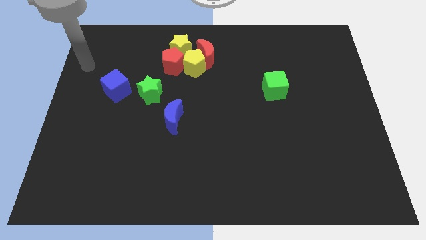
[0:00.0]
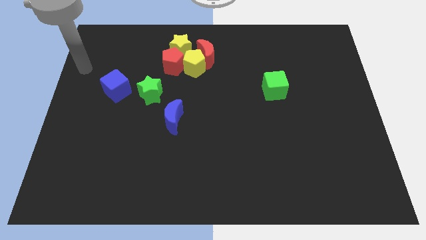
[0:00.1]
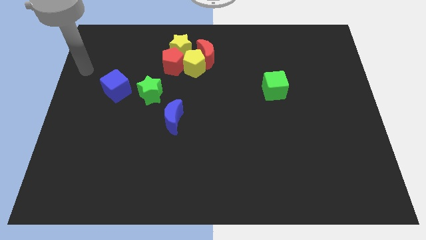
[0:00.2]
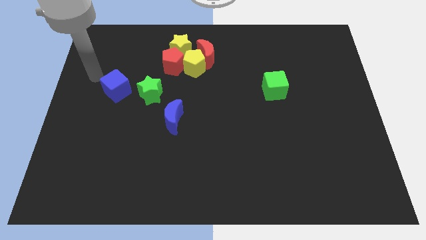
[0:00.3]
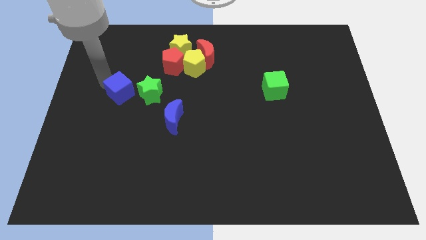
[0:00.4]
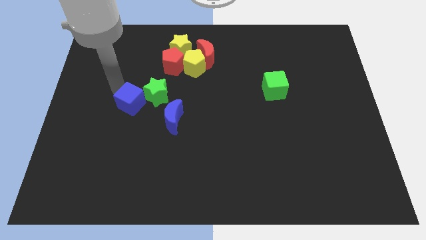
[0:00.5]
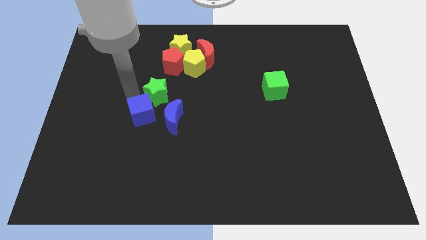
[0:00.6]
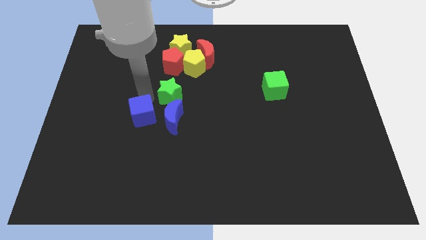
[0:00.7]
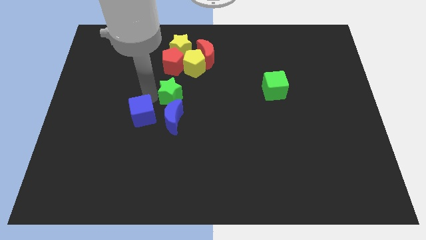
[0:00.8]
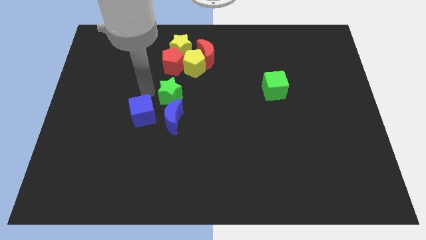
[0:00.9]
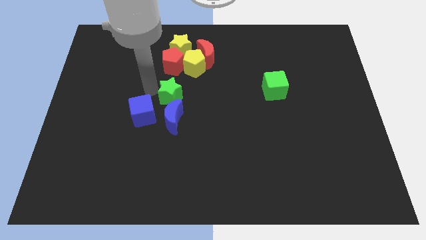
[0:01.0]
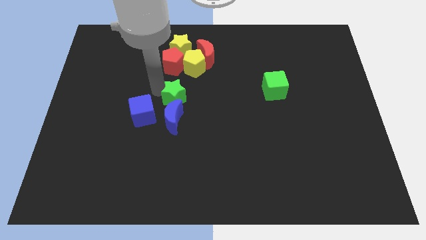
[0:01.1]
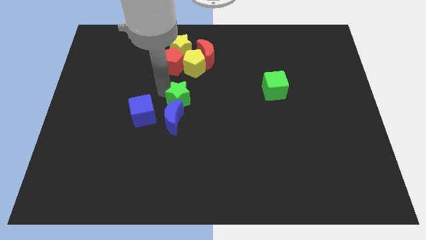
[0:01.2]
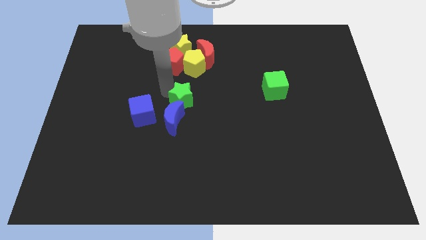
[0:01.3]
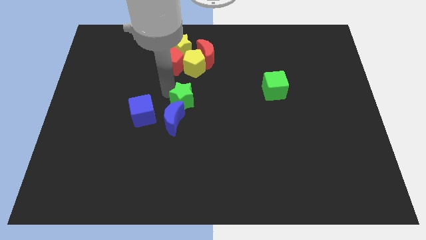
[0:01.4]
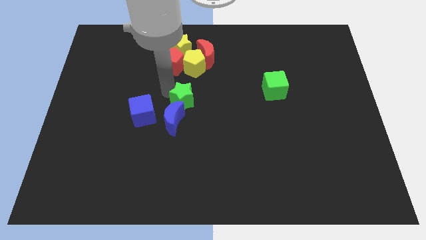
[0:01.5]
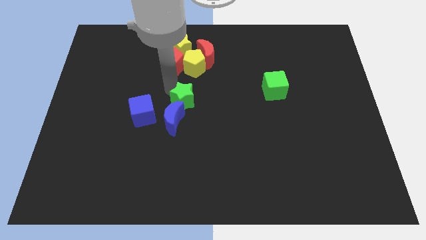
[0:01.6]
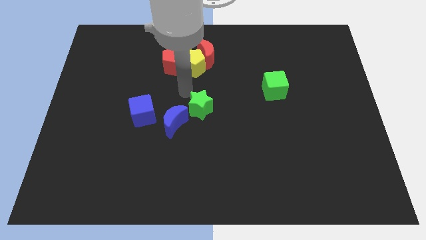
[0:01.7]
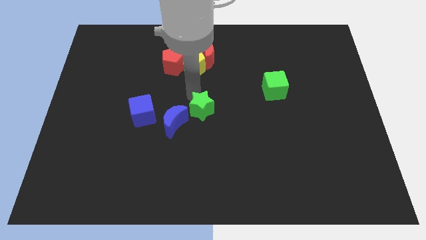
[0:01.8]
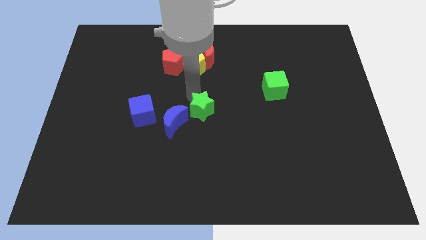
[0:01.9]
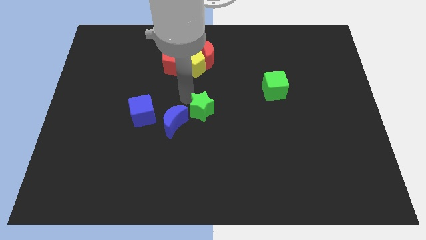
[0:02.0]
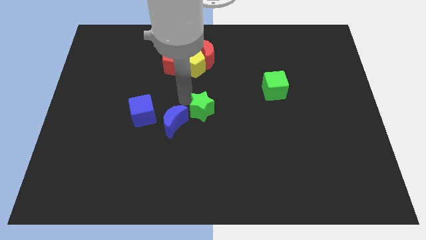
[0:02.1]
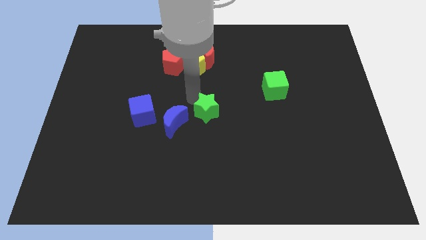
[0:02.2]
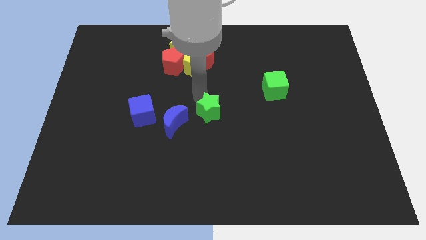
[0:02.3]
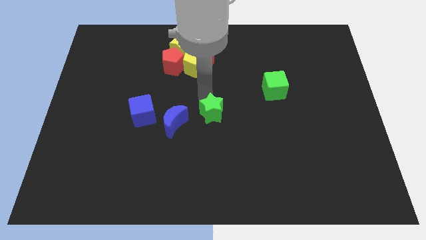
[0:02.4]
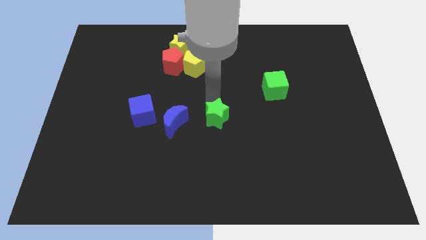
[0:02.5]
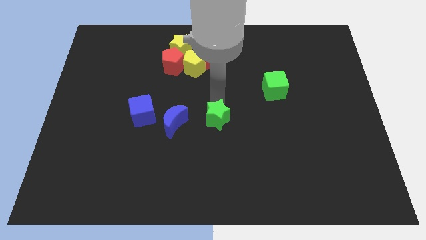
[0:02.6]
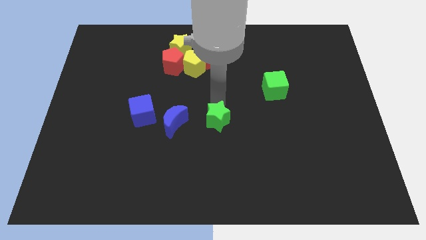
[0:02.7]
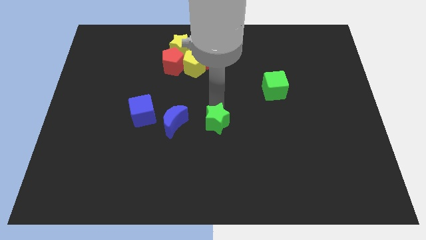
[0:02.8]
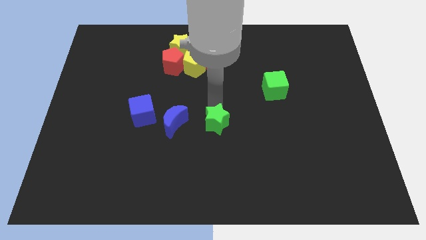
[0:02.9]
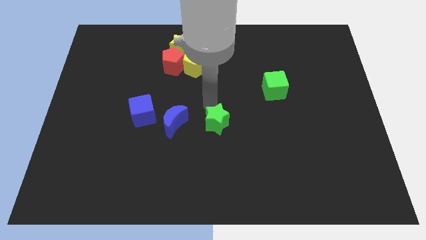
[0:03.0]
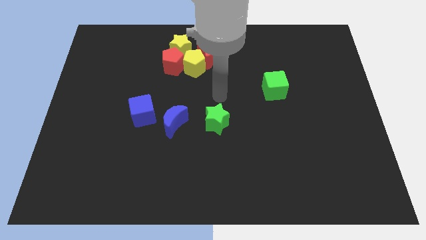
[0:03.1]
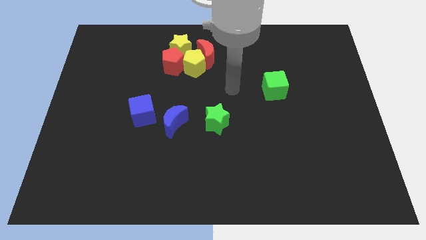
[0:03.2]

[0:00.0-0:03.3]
move the green star to the center of the board

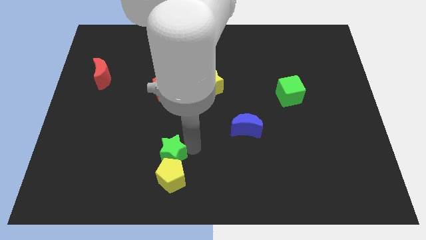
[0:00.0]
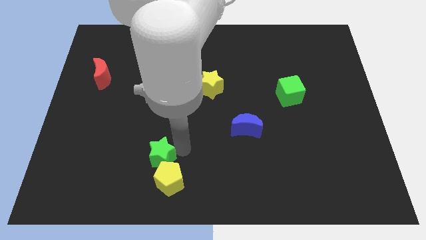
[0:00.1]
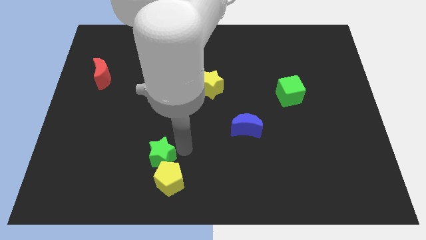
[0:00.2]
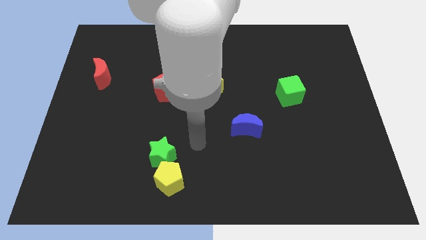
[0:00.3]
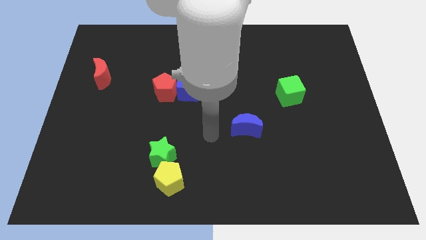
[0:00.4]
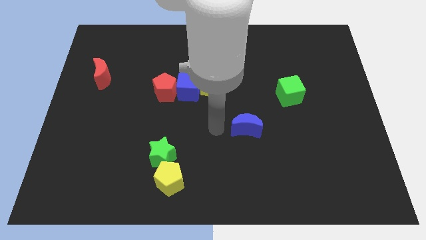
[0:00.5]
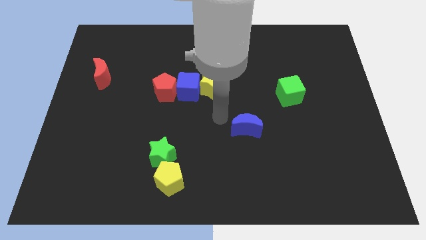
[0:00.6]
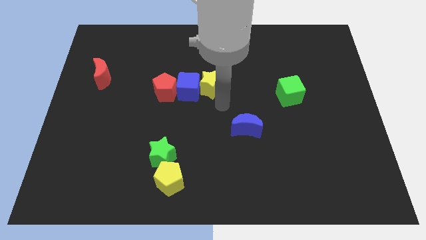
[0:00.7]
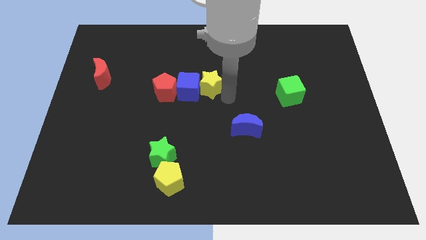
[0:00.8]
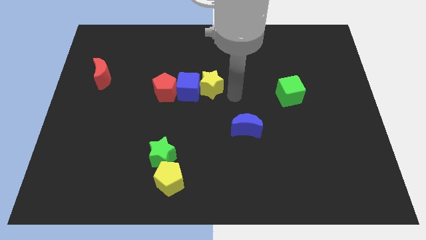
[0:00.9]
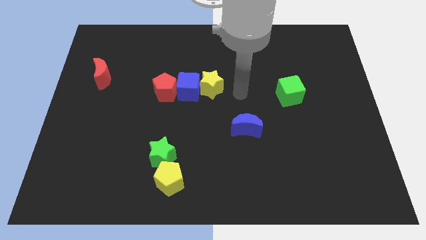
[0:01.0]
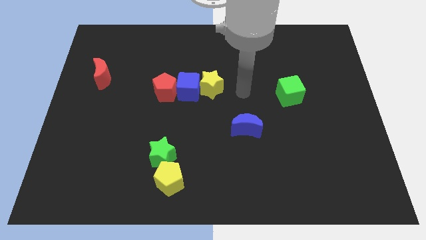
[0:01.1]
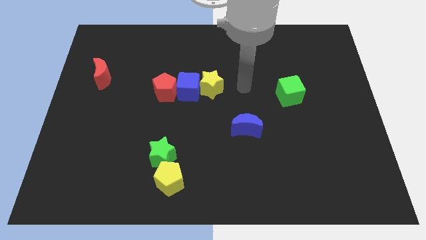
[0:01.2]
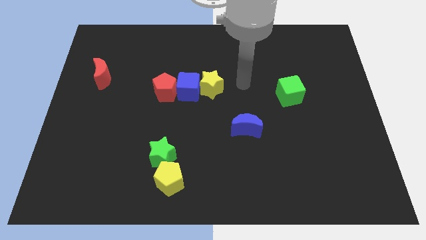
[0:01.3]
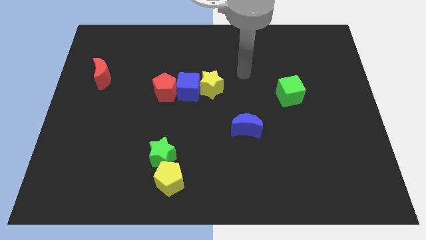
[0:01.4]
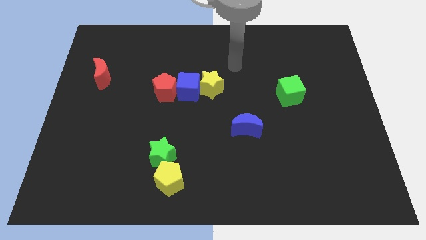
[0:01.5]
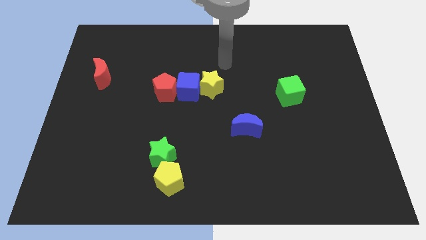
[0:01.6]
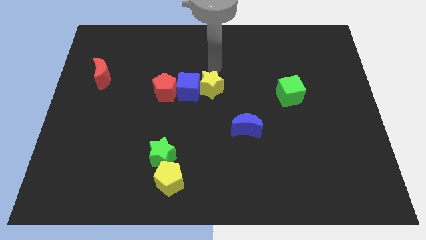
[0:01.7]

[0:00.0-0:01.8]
move the arm above the yellow star

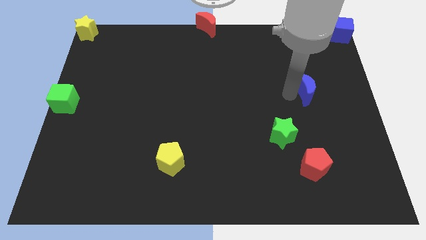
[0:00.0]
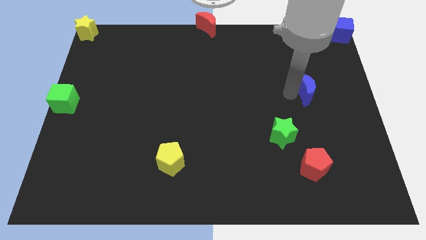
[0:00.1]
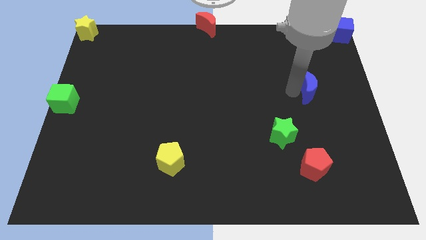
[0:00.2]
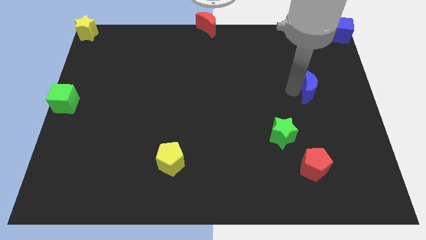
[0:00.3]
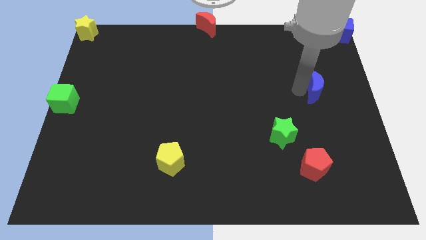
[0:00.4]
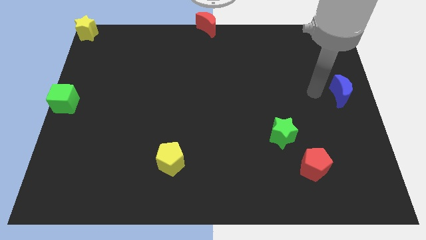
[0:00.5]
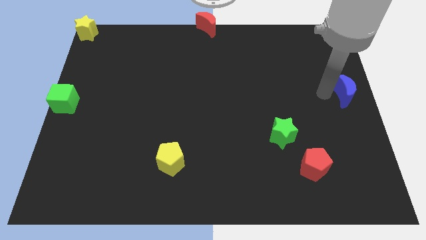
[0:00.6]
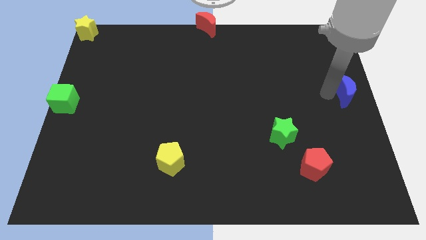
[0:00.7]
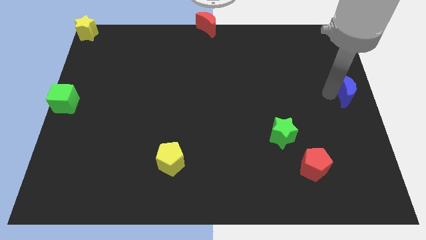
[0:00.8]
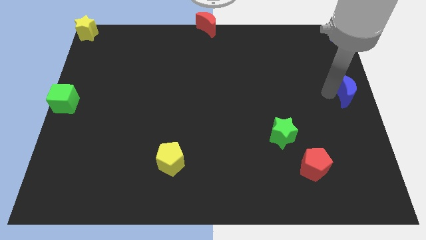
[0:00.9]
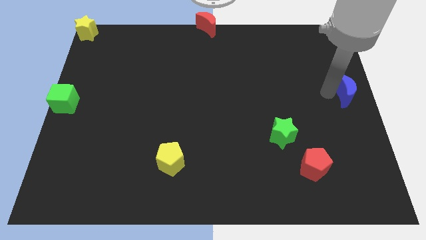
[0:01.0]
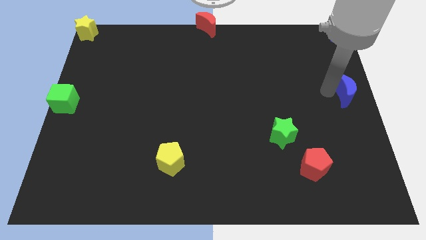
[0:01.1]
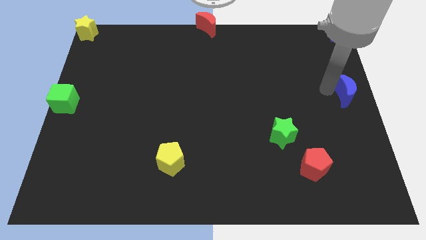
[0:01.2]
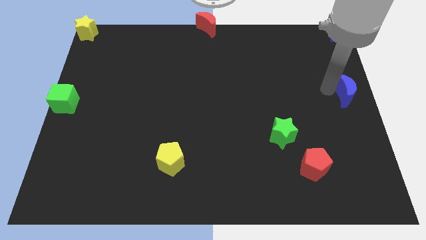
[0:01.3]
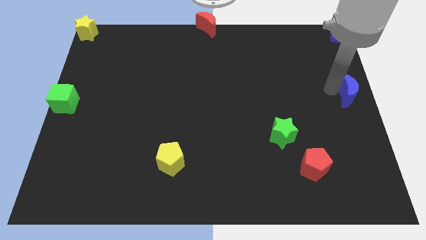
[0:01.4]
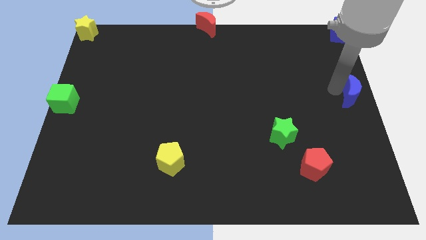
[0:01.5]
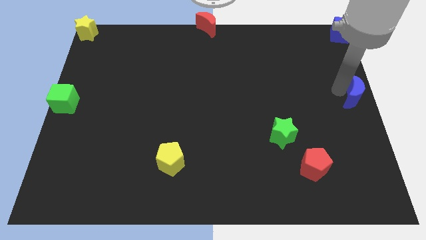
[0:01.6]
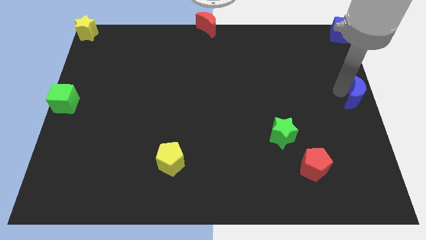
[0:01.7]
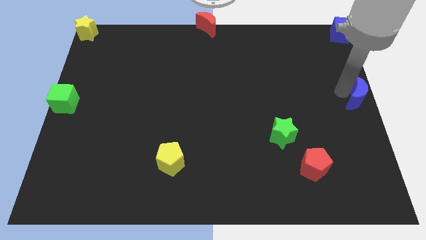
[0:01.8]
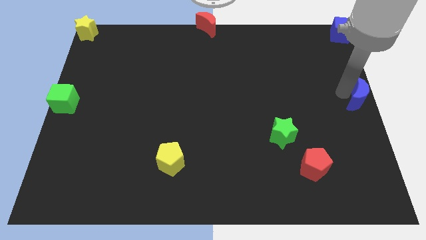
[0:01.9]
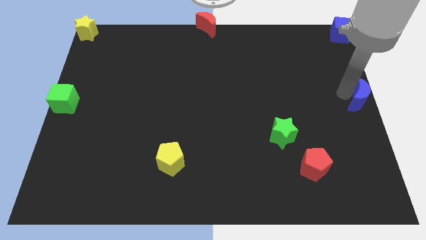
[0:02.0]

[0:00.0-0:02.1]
move the blue cube to the right center

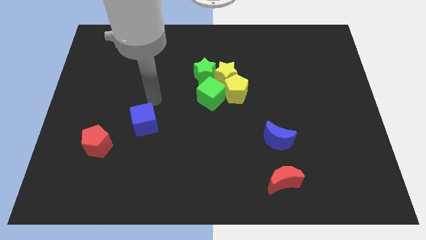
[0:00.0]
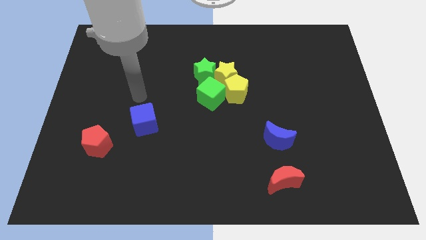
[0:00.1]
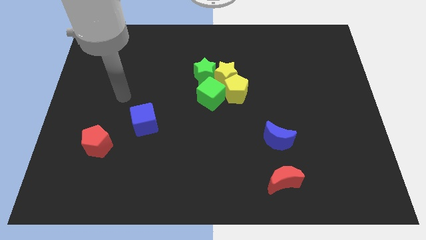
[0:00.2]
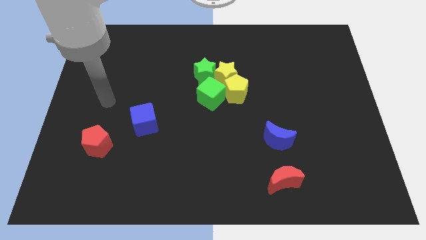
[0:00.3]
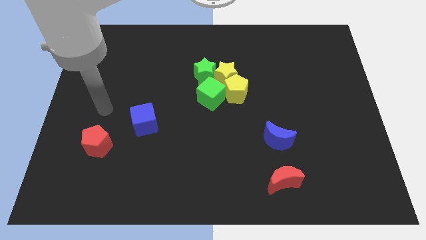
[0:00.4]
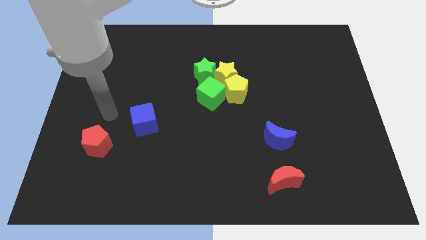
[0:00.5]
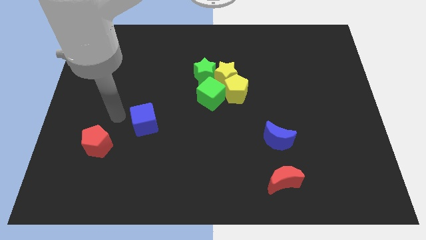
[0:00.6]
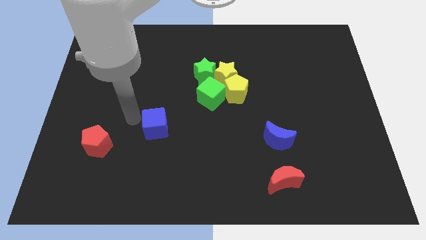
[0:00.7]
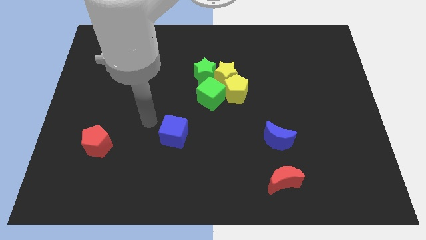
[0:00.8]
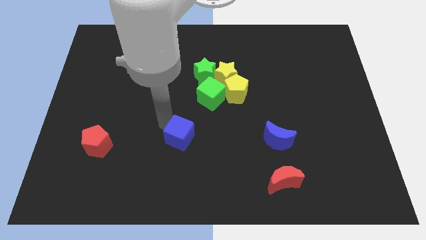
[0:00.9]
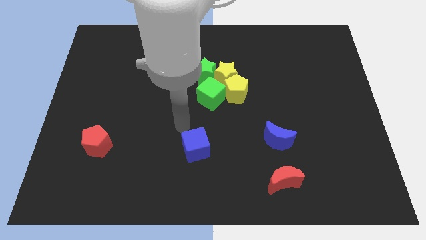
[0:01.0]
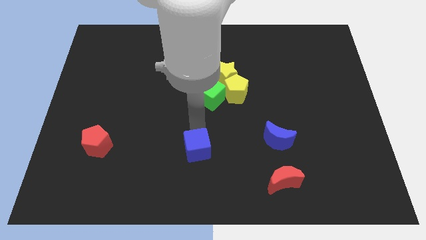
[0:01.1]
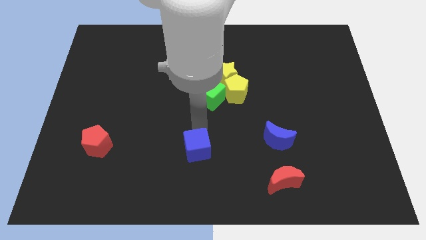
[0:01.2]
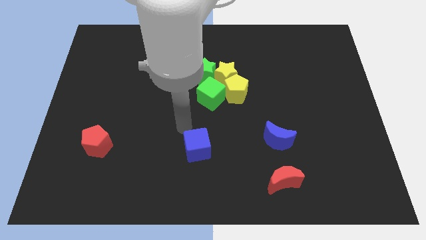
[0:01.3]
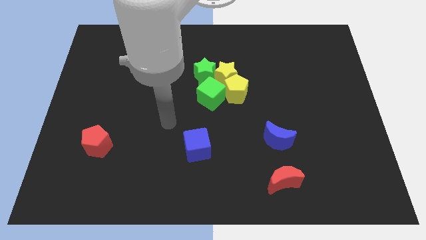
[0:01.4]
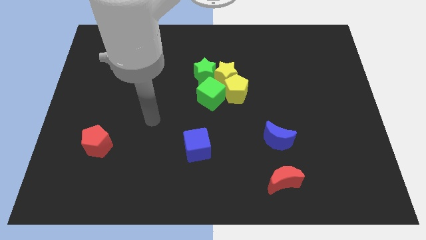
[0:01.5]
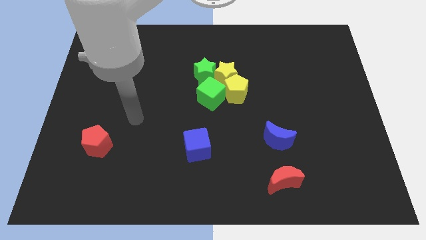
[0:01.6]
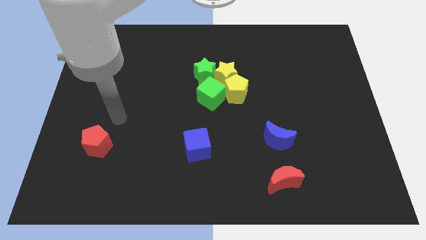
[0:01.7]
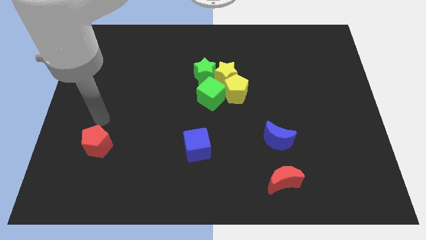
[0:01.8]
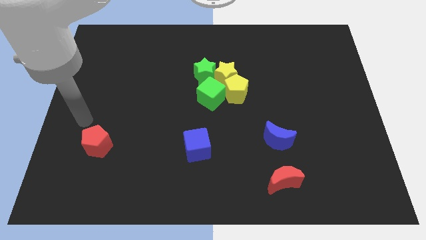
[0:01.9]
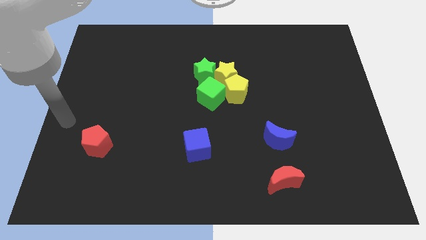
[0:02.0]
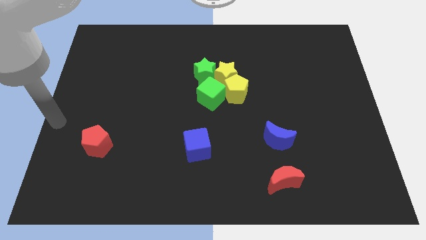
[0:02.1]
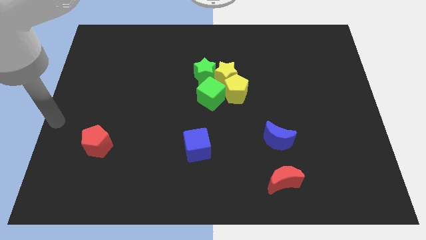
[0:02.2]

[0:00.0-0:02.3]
place the blue cube vertically at the bottom side of the green cube
